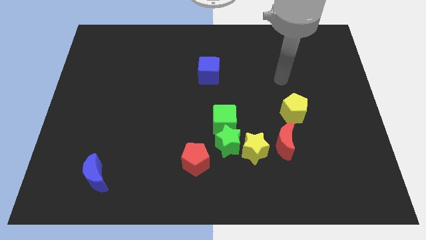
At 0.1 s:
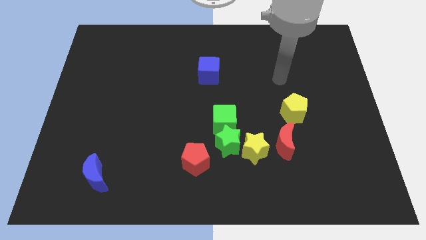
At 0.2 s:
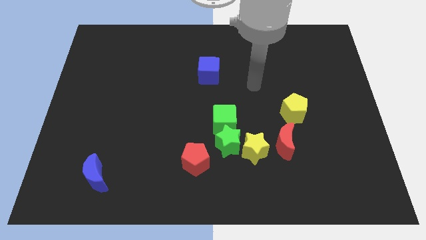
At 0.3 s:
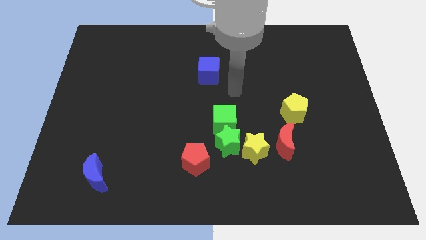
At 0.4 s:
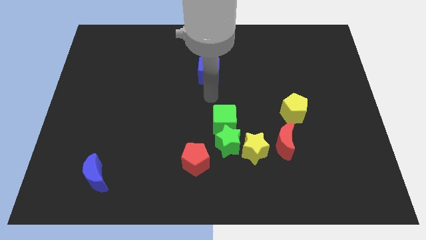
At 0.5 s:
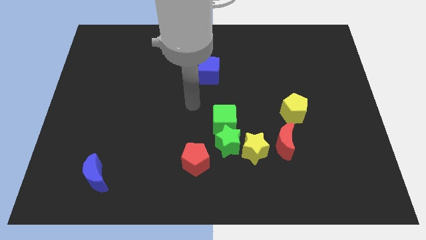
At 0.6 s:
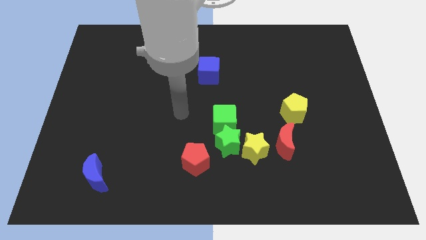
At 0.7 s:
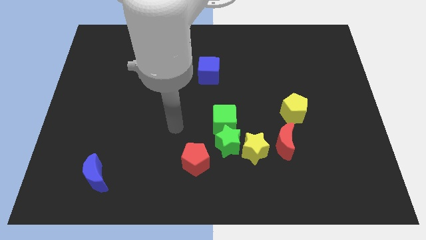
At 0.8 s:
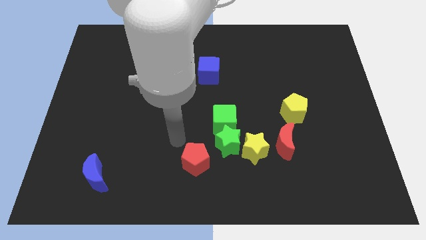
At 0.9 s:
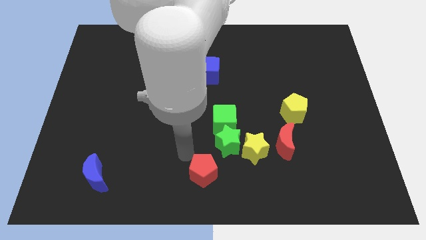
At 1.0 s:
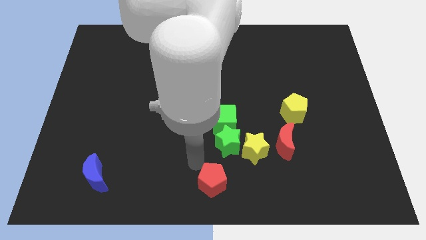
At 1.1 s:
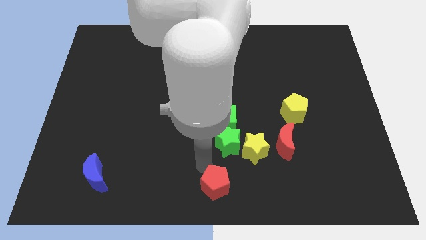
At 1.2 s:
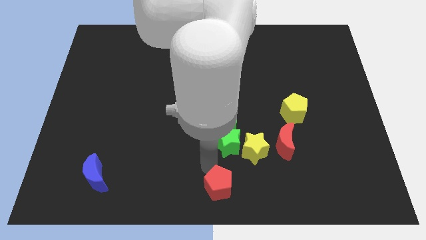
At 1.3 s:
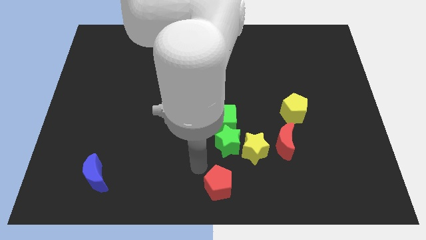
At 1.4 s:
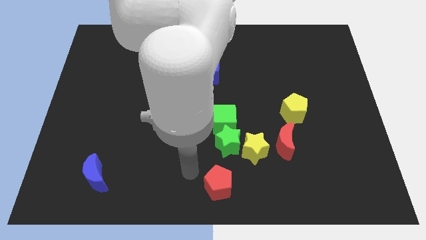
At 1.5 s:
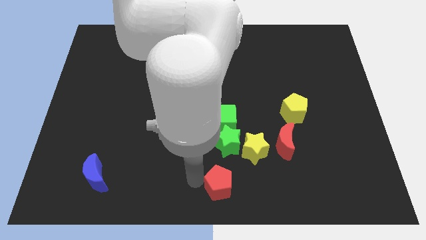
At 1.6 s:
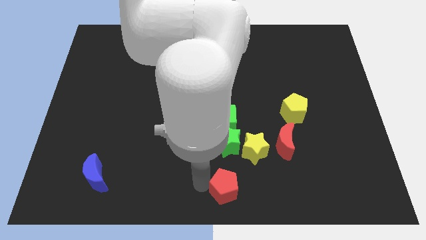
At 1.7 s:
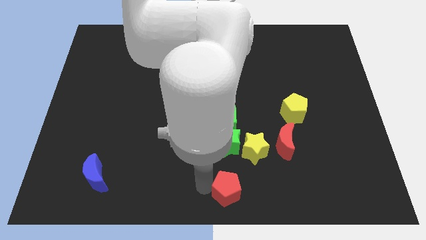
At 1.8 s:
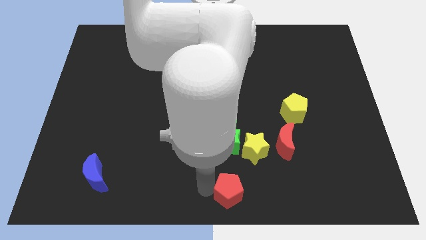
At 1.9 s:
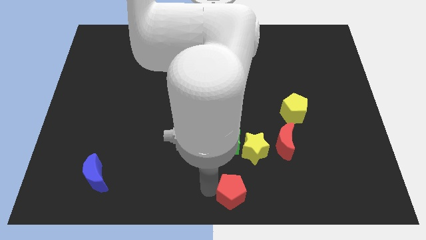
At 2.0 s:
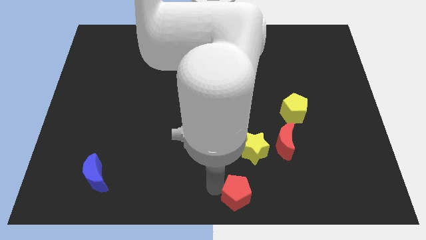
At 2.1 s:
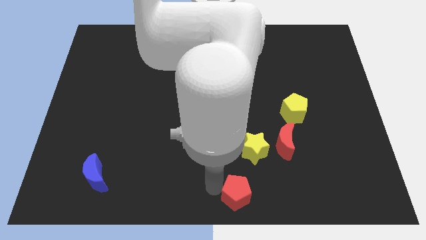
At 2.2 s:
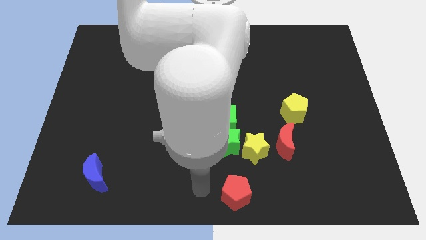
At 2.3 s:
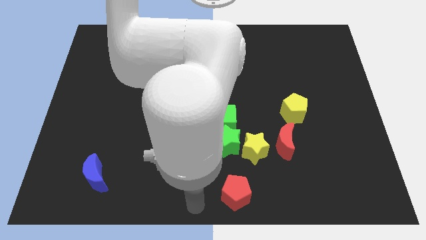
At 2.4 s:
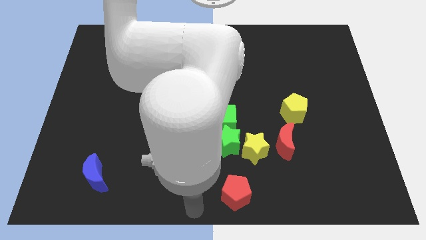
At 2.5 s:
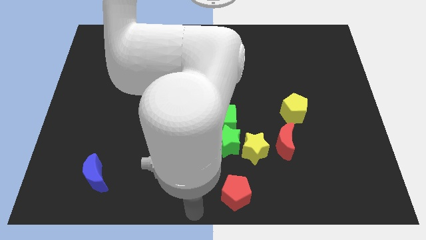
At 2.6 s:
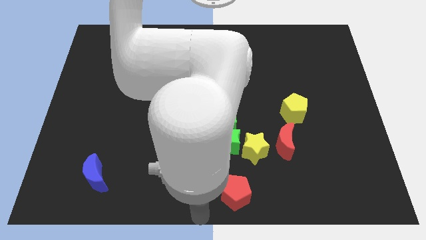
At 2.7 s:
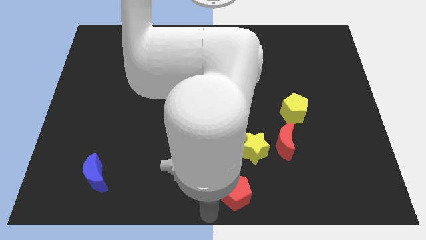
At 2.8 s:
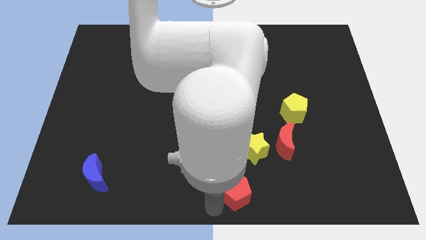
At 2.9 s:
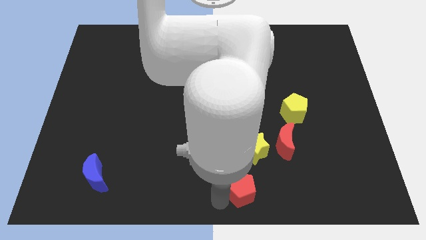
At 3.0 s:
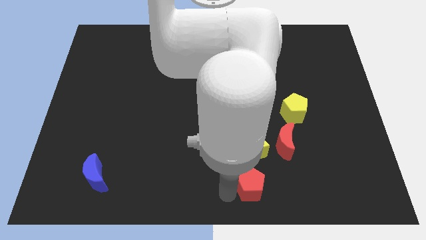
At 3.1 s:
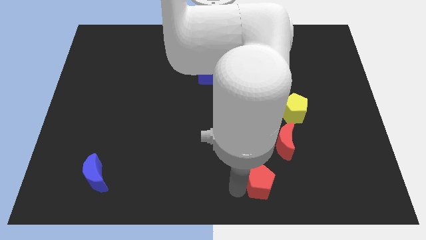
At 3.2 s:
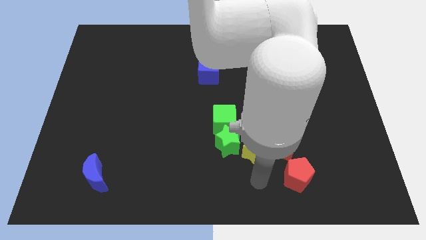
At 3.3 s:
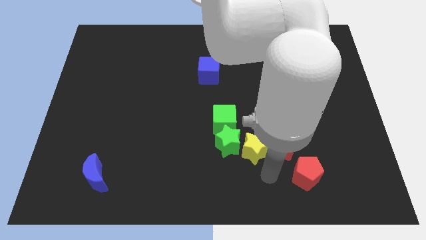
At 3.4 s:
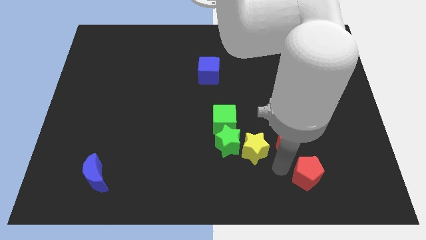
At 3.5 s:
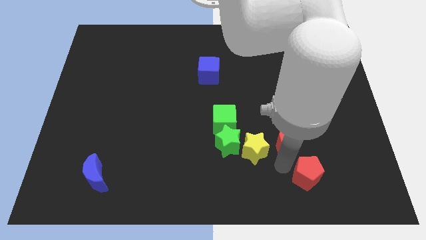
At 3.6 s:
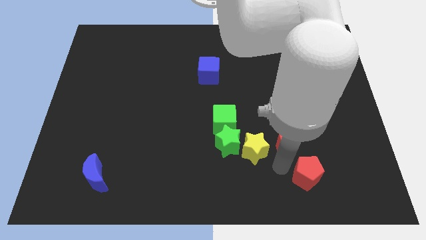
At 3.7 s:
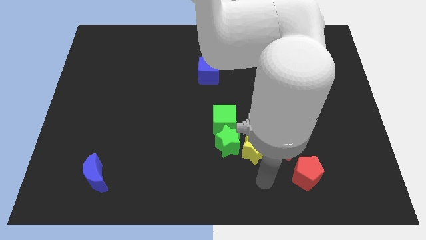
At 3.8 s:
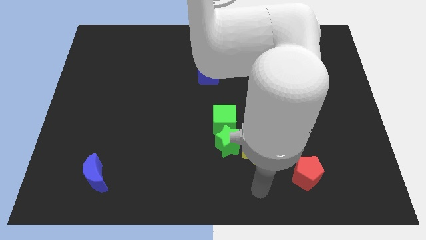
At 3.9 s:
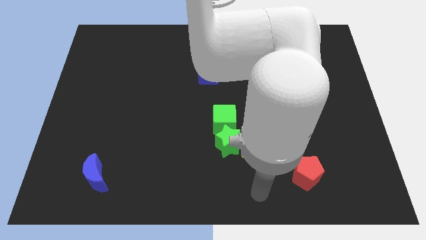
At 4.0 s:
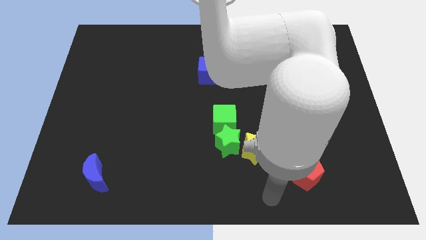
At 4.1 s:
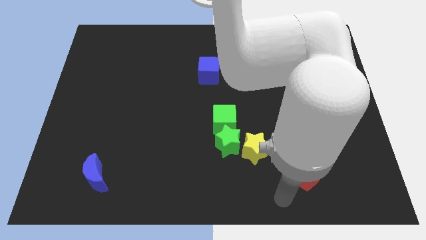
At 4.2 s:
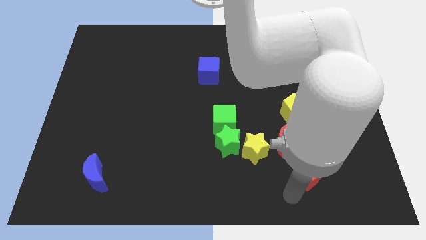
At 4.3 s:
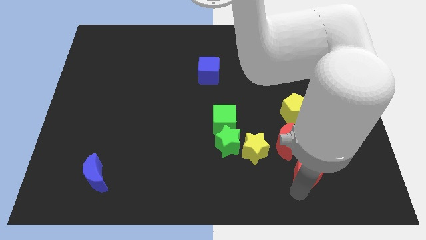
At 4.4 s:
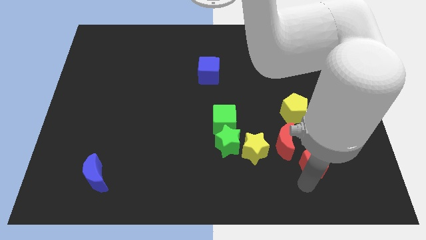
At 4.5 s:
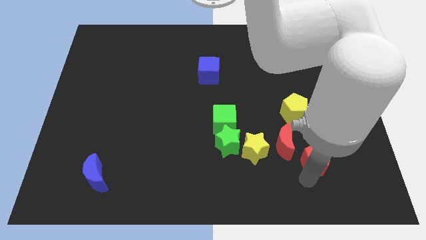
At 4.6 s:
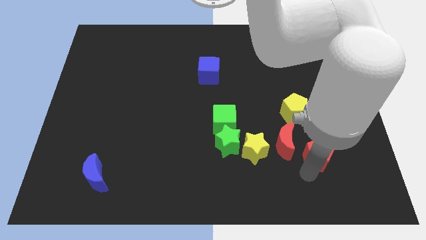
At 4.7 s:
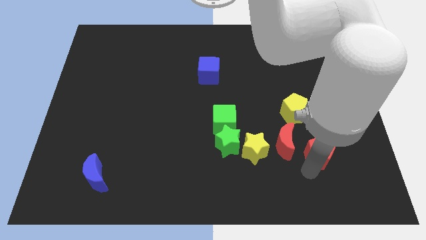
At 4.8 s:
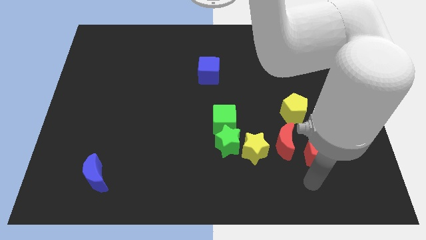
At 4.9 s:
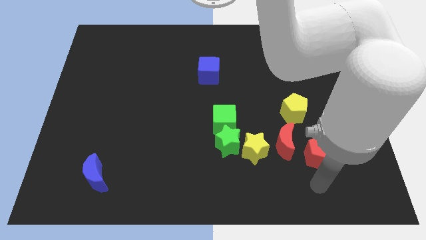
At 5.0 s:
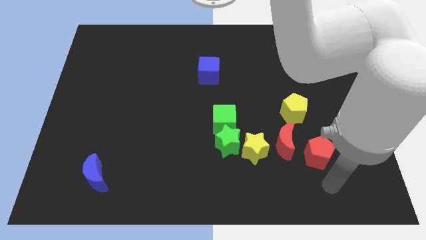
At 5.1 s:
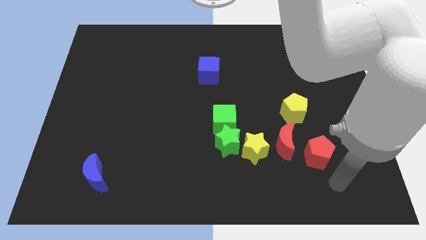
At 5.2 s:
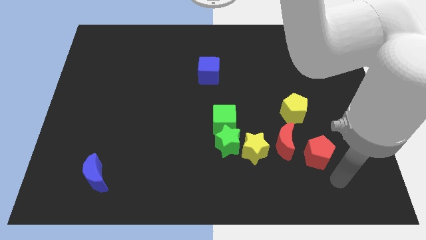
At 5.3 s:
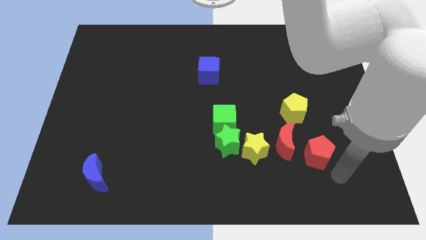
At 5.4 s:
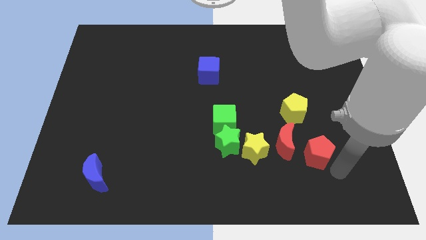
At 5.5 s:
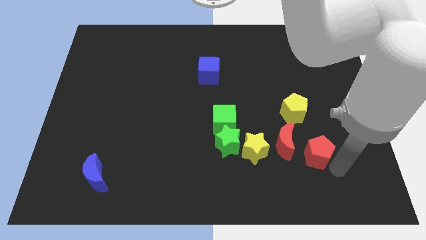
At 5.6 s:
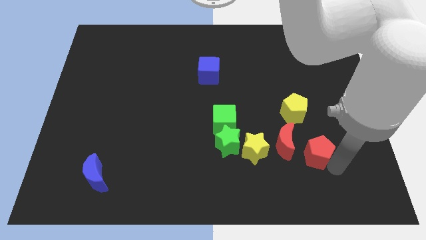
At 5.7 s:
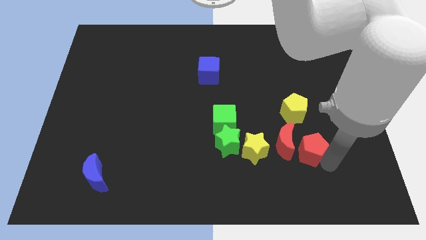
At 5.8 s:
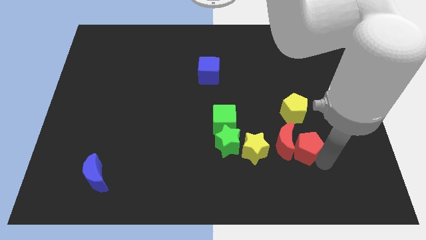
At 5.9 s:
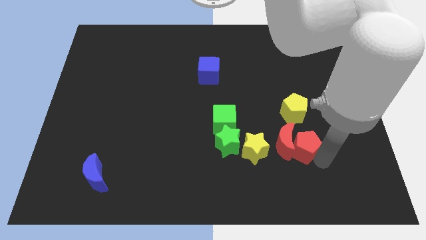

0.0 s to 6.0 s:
push the red pentagon to the red moon

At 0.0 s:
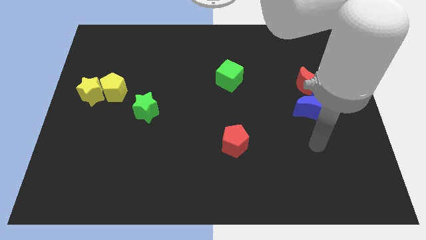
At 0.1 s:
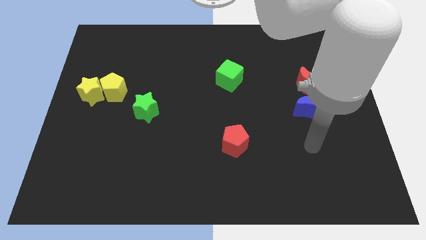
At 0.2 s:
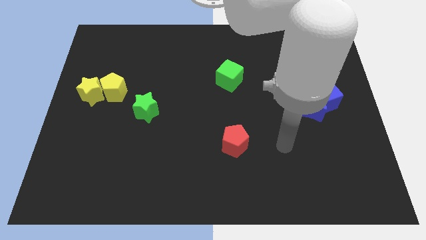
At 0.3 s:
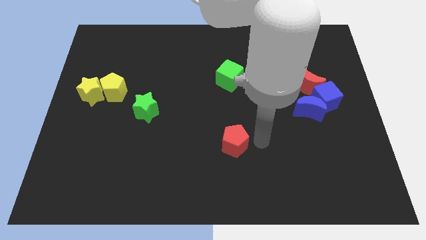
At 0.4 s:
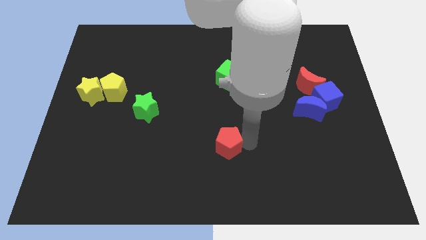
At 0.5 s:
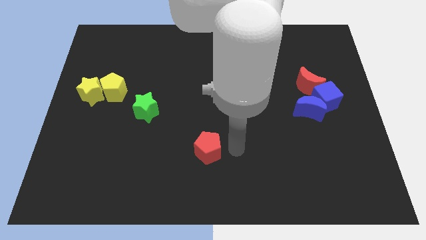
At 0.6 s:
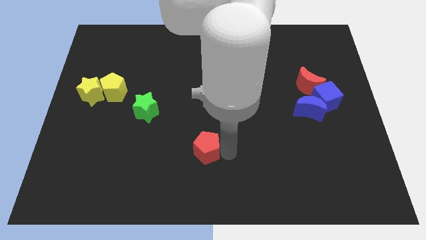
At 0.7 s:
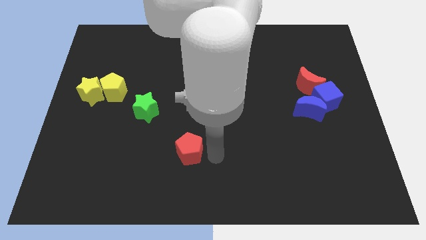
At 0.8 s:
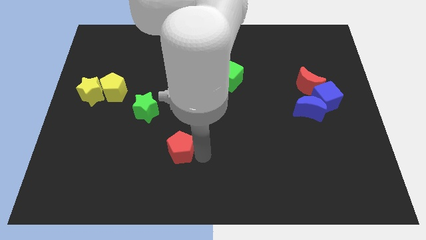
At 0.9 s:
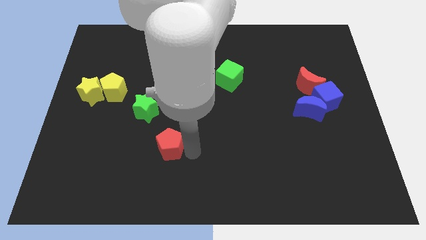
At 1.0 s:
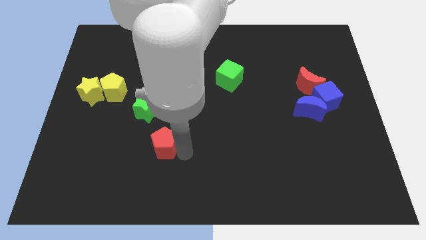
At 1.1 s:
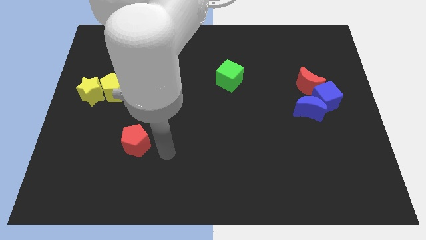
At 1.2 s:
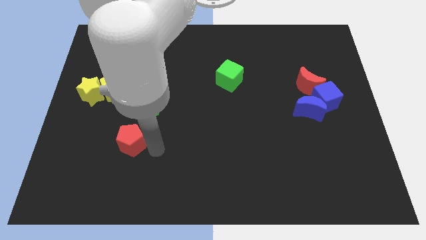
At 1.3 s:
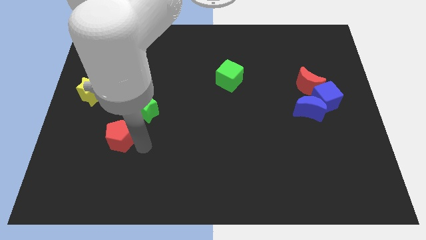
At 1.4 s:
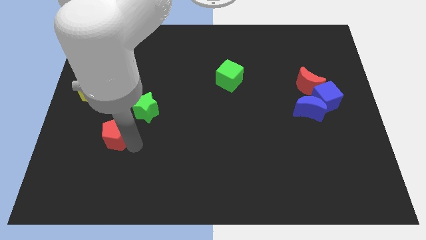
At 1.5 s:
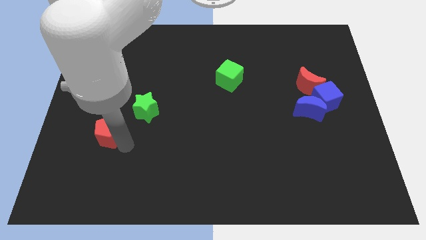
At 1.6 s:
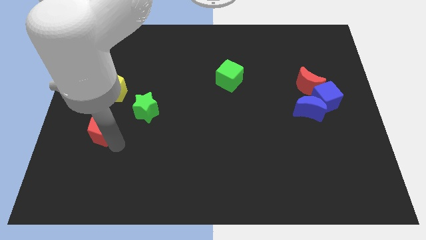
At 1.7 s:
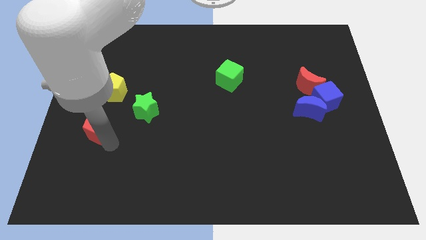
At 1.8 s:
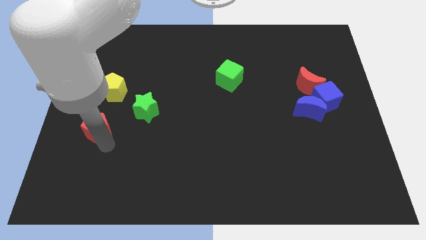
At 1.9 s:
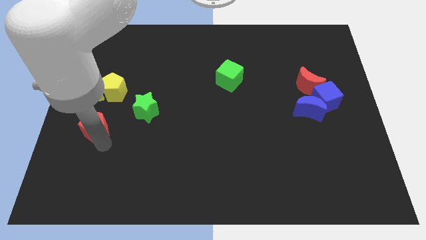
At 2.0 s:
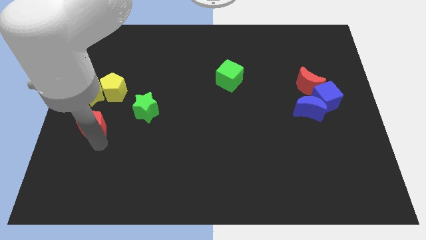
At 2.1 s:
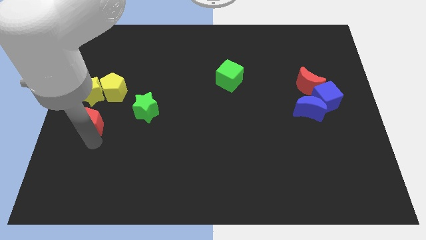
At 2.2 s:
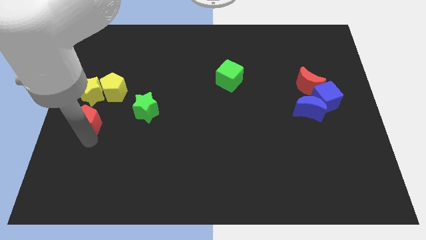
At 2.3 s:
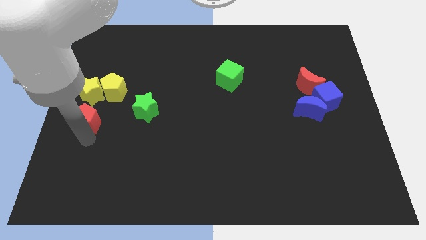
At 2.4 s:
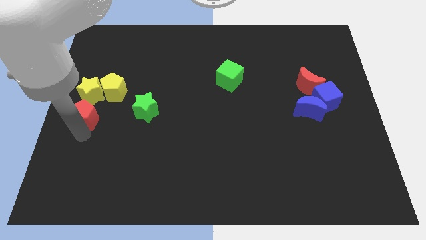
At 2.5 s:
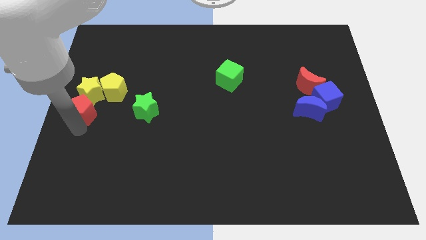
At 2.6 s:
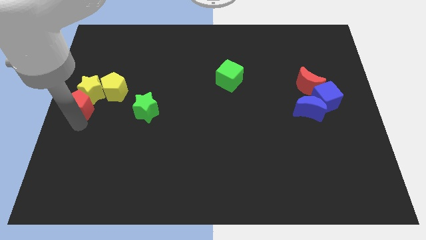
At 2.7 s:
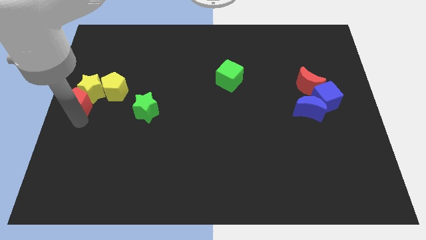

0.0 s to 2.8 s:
put the red pentagon close to the yellow star
